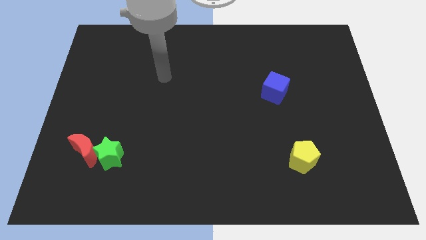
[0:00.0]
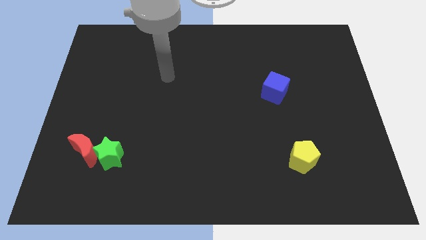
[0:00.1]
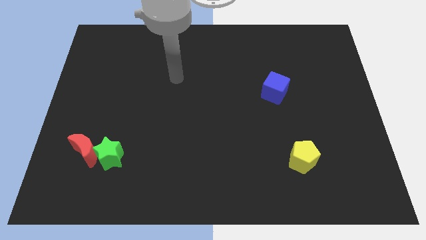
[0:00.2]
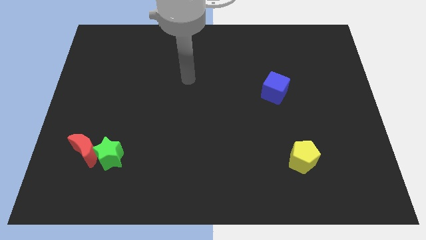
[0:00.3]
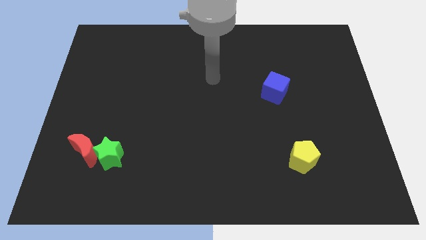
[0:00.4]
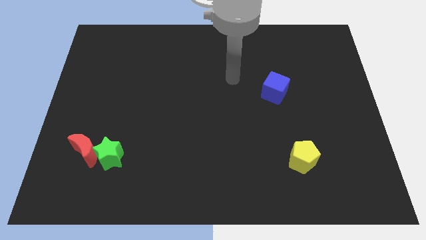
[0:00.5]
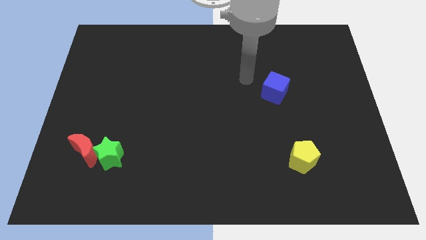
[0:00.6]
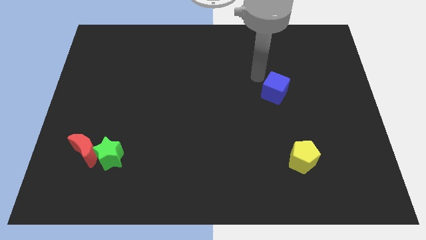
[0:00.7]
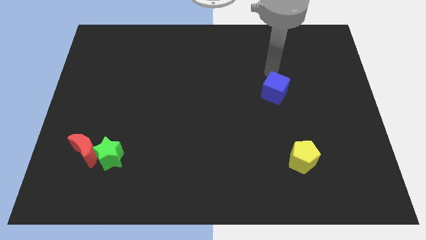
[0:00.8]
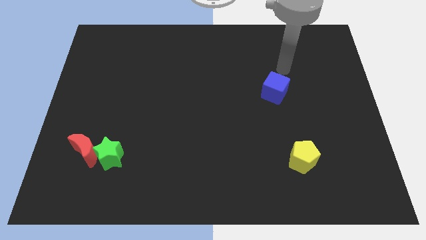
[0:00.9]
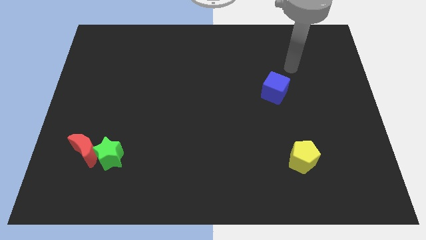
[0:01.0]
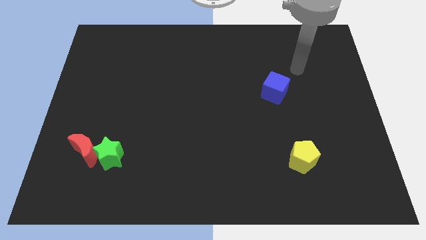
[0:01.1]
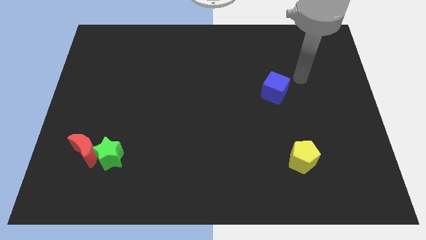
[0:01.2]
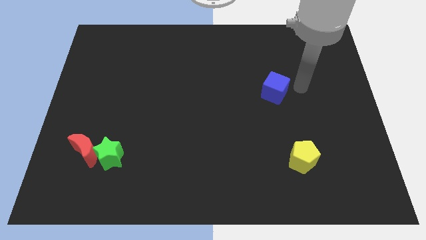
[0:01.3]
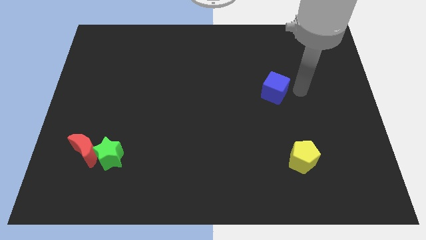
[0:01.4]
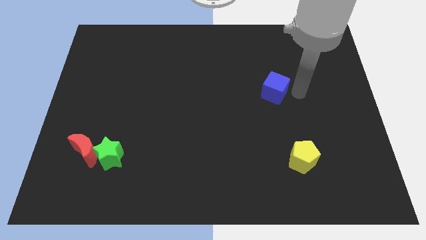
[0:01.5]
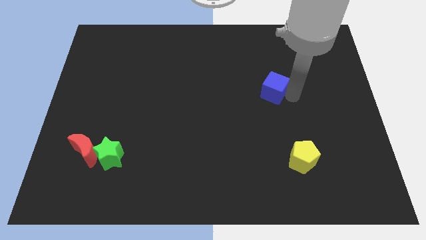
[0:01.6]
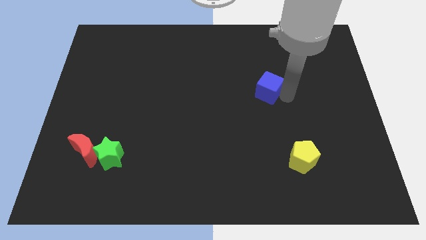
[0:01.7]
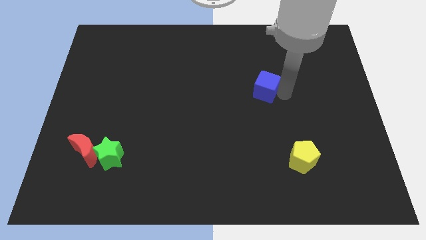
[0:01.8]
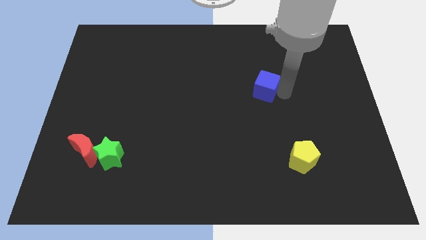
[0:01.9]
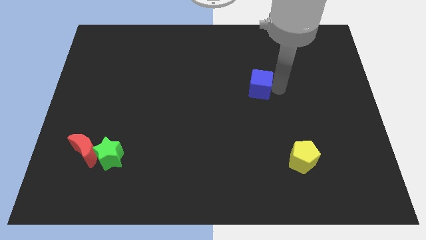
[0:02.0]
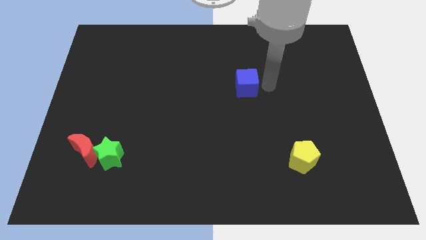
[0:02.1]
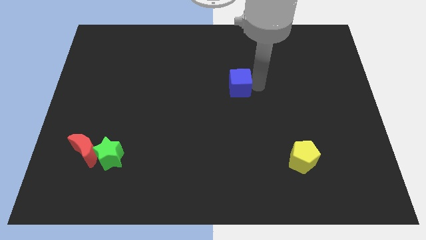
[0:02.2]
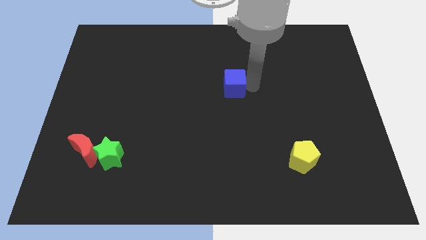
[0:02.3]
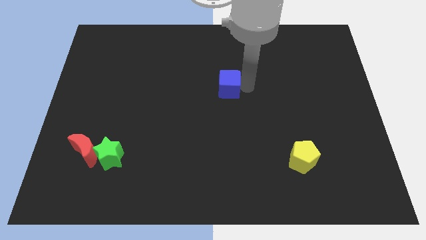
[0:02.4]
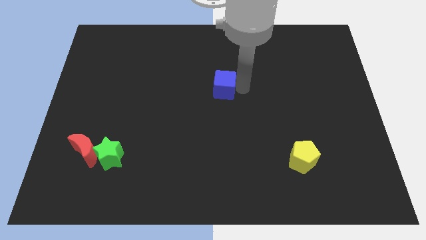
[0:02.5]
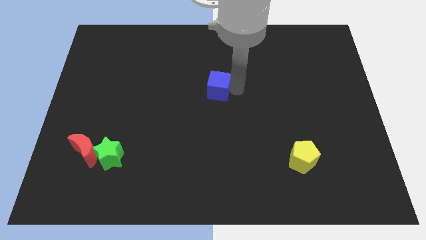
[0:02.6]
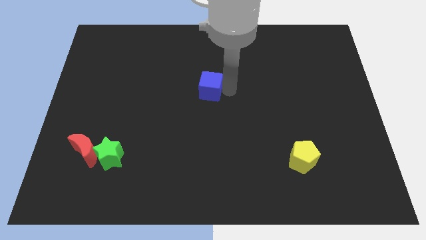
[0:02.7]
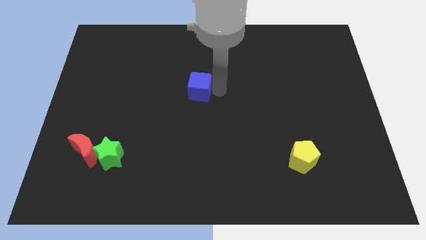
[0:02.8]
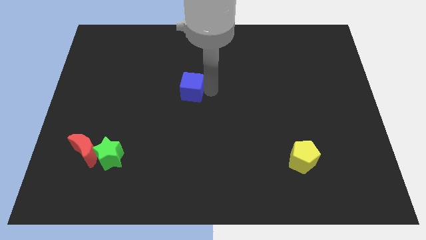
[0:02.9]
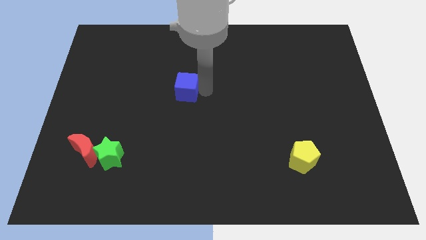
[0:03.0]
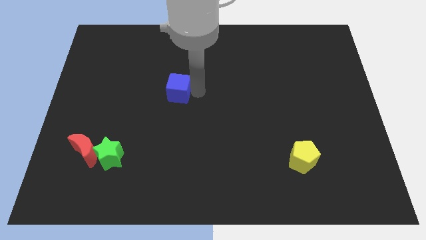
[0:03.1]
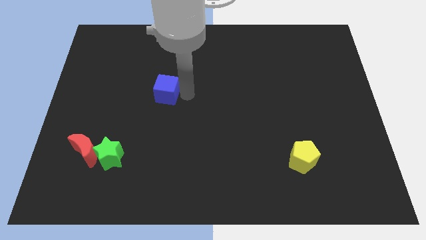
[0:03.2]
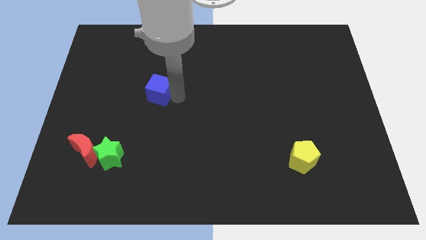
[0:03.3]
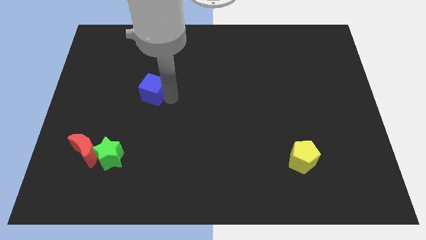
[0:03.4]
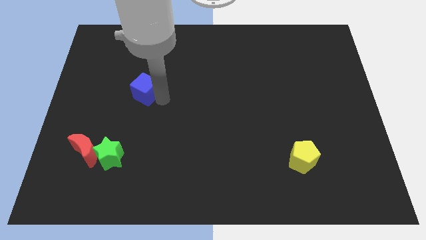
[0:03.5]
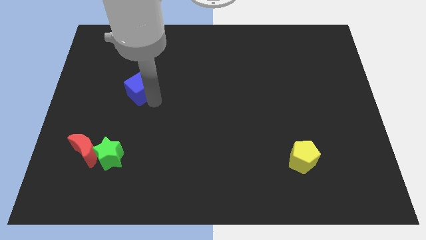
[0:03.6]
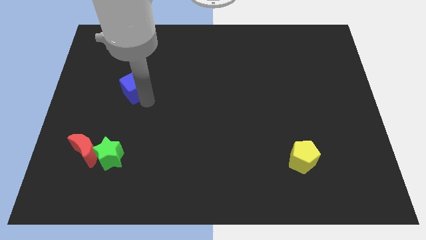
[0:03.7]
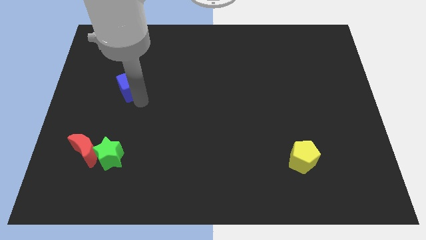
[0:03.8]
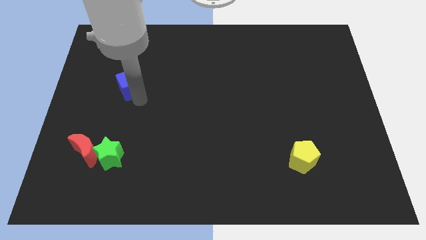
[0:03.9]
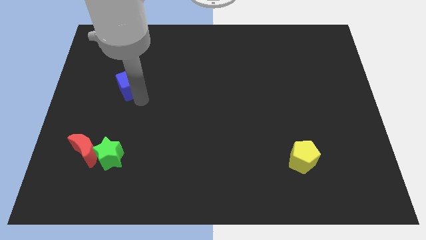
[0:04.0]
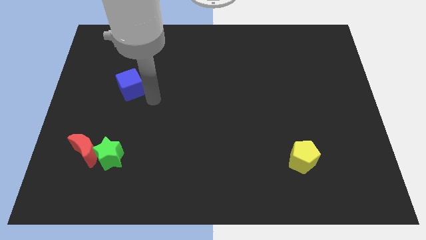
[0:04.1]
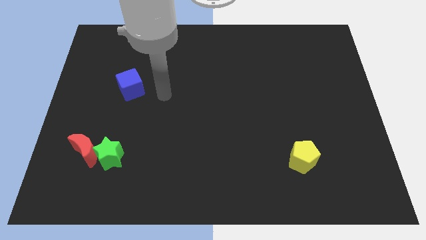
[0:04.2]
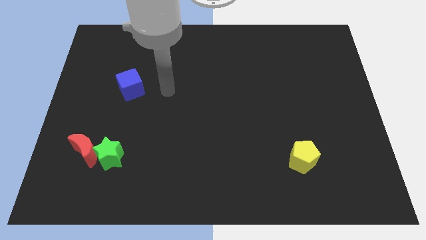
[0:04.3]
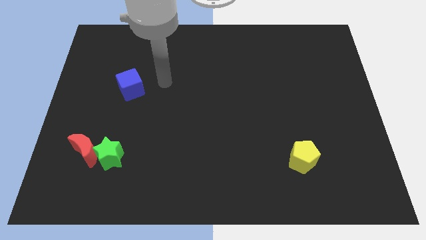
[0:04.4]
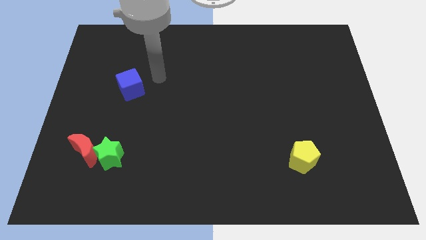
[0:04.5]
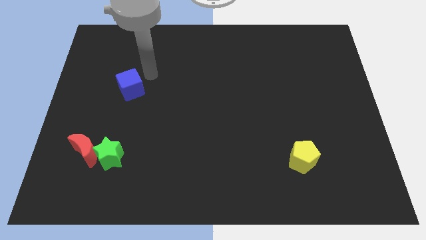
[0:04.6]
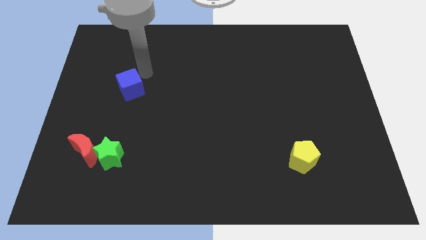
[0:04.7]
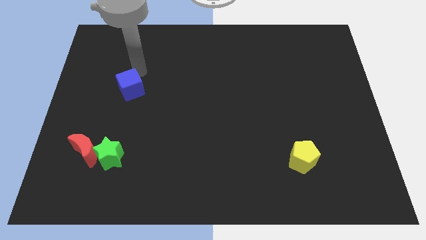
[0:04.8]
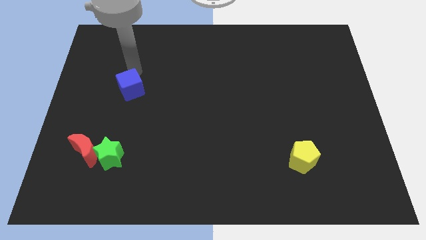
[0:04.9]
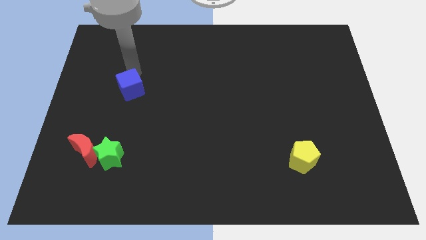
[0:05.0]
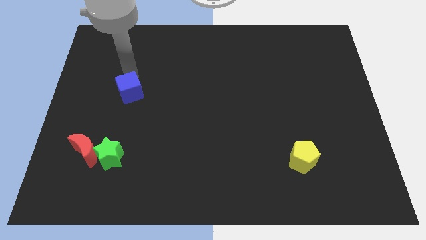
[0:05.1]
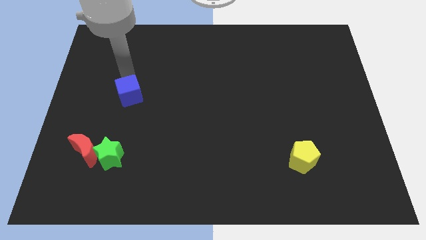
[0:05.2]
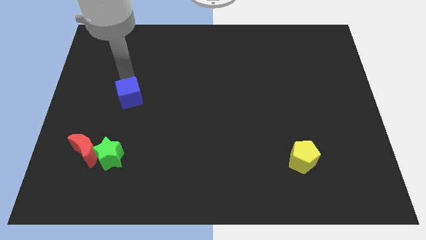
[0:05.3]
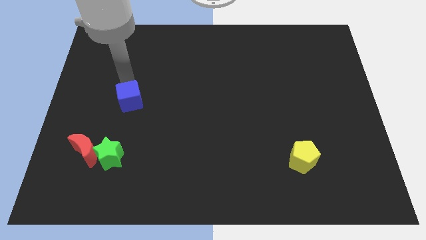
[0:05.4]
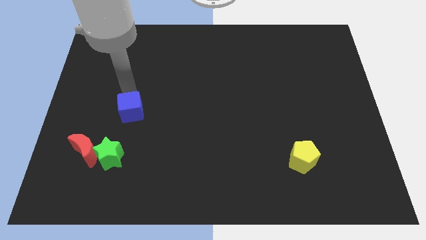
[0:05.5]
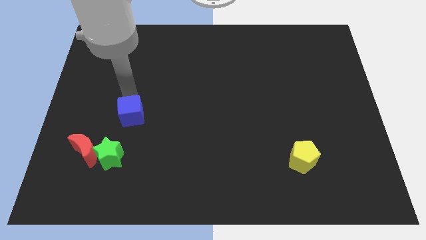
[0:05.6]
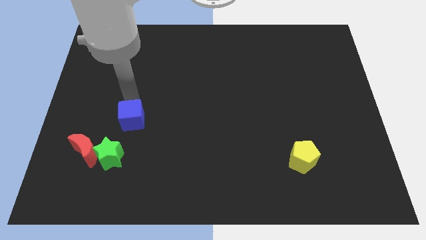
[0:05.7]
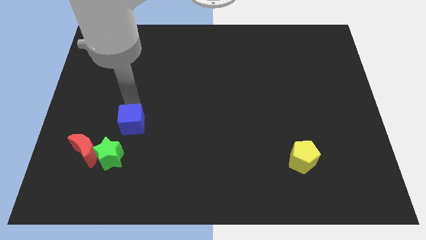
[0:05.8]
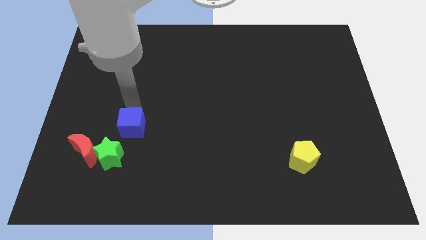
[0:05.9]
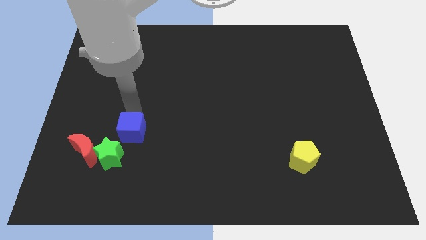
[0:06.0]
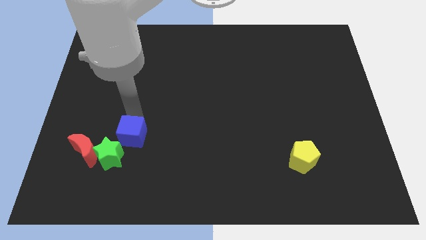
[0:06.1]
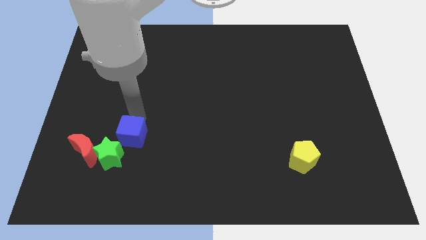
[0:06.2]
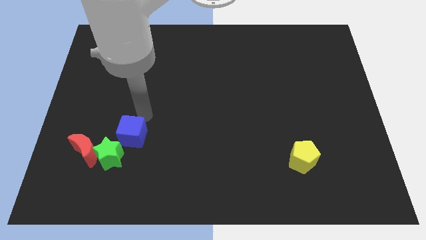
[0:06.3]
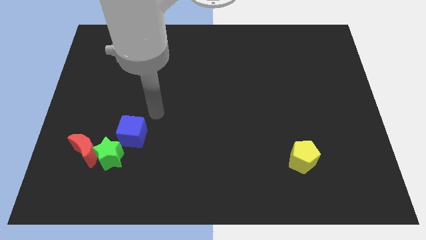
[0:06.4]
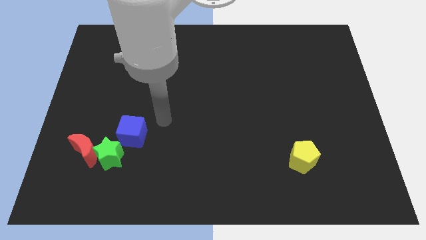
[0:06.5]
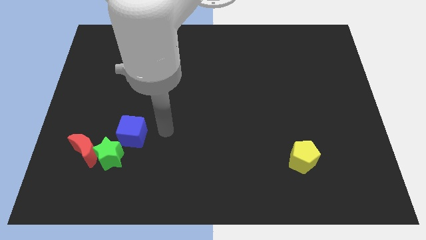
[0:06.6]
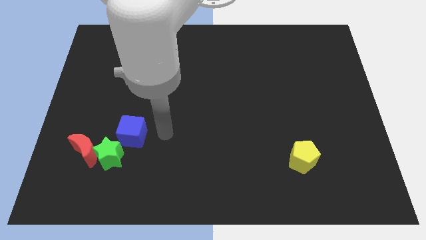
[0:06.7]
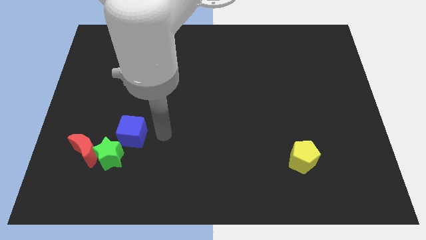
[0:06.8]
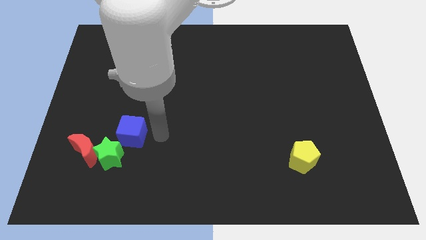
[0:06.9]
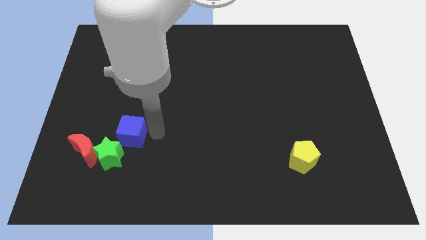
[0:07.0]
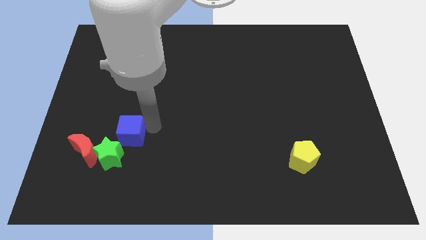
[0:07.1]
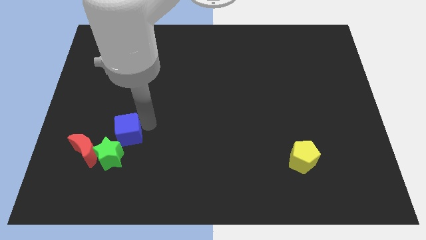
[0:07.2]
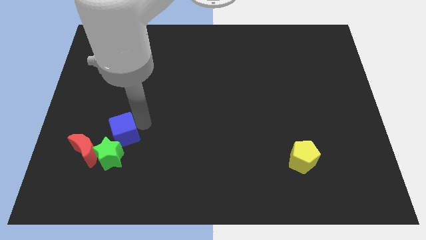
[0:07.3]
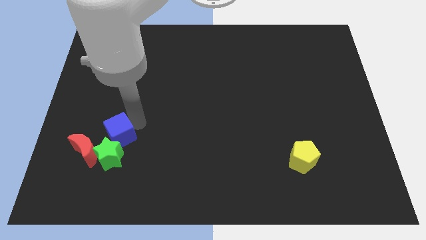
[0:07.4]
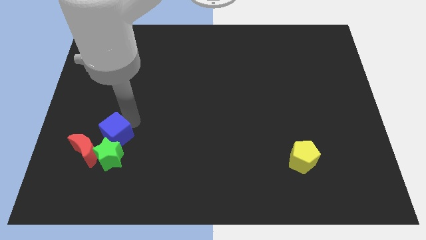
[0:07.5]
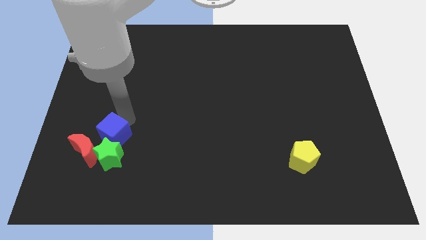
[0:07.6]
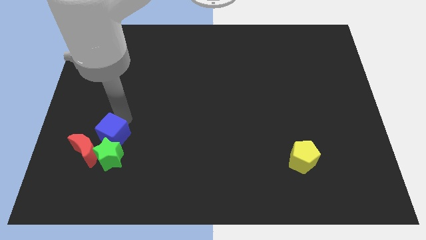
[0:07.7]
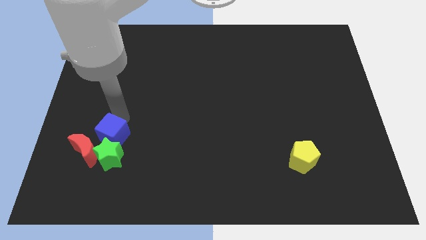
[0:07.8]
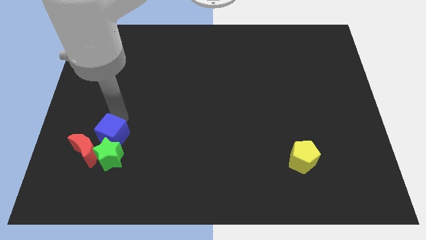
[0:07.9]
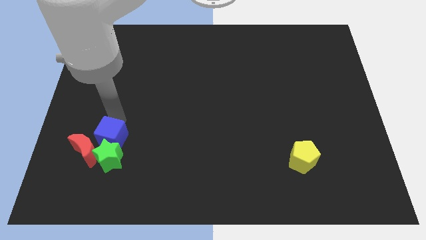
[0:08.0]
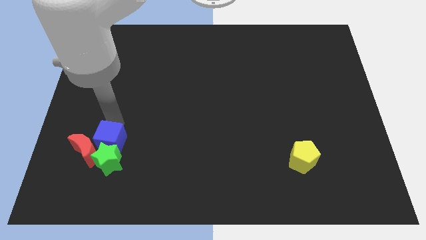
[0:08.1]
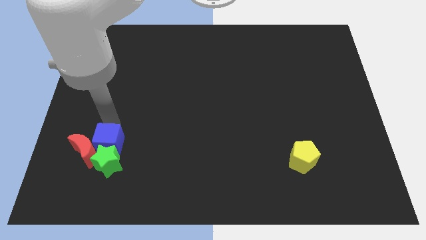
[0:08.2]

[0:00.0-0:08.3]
move the blue cube to the red block

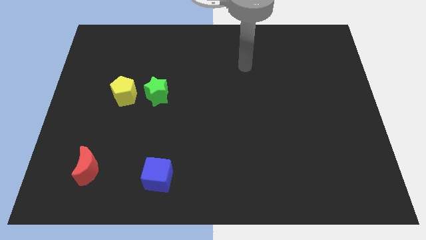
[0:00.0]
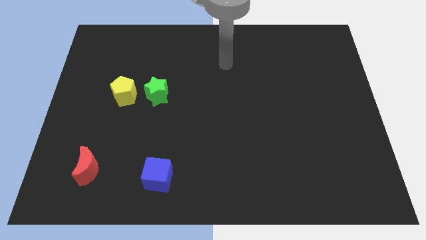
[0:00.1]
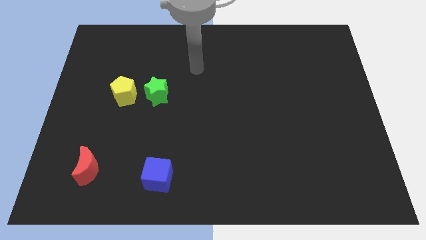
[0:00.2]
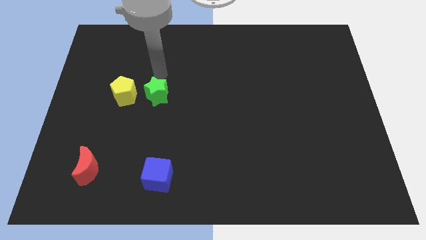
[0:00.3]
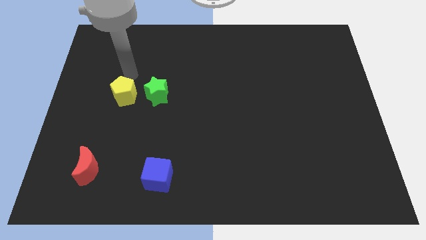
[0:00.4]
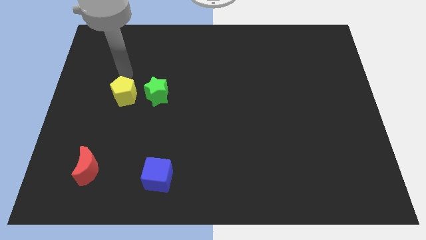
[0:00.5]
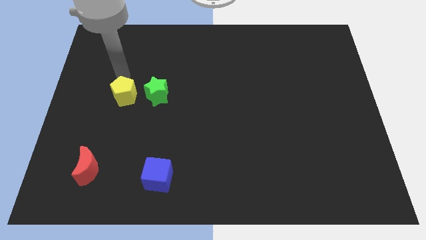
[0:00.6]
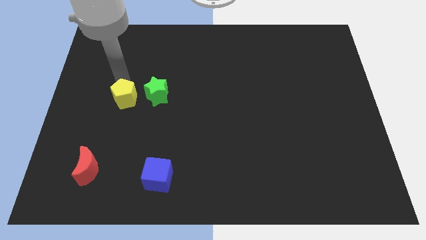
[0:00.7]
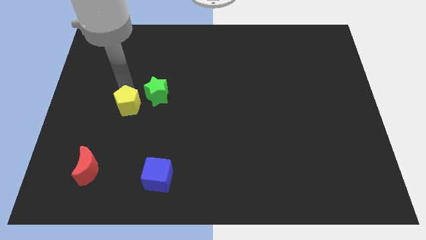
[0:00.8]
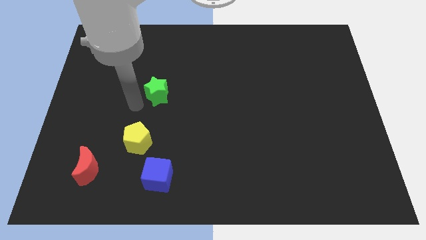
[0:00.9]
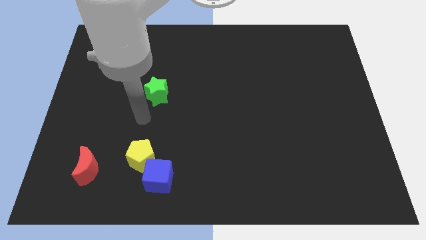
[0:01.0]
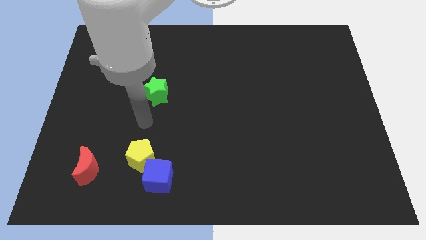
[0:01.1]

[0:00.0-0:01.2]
put the yellow block close to the blue block
